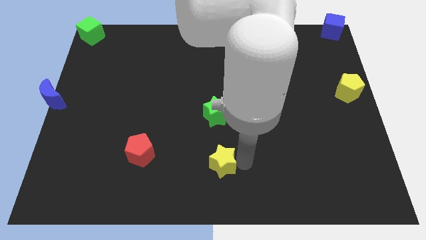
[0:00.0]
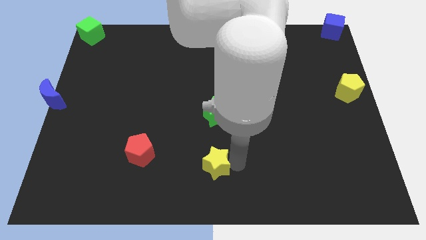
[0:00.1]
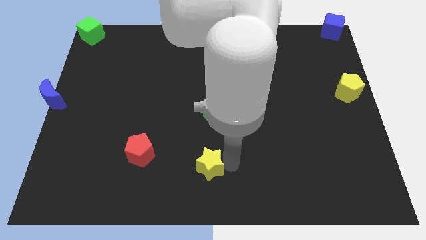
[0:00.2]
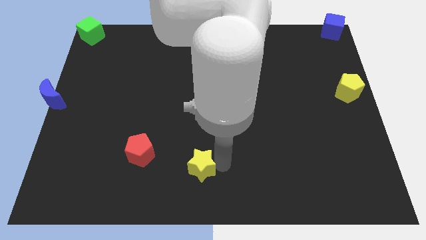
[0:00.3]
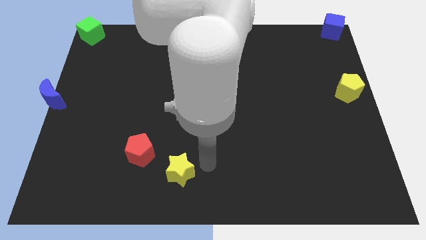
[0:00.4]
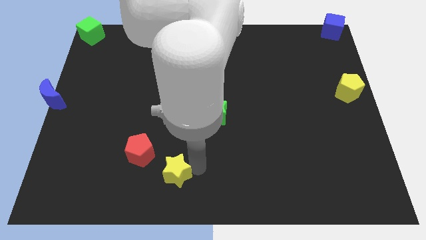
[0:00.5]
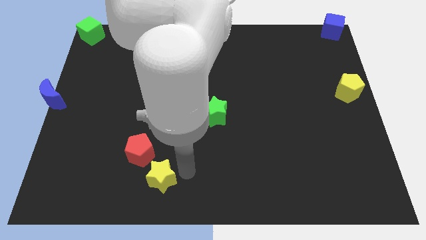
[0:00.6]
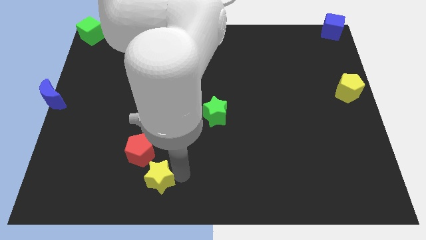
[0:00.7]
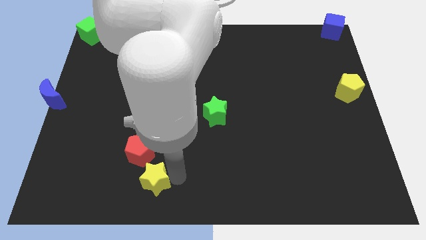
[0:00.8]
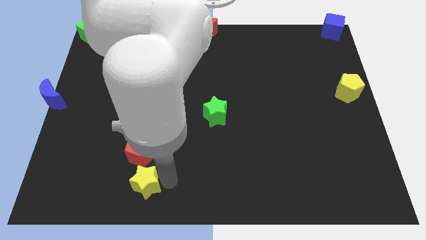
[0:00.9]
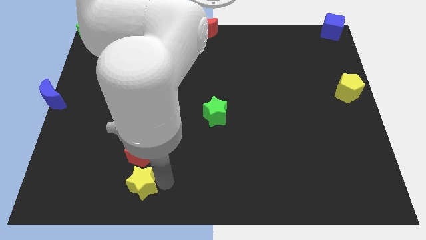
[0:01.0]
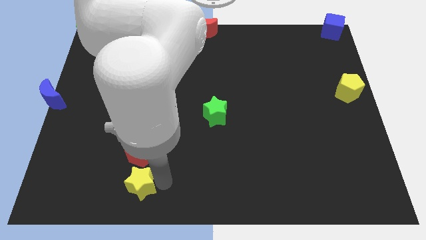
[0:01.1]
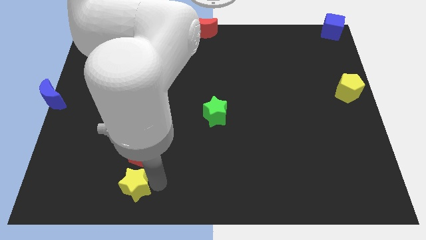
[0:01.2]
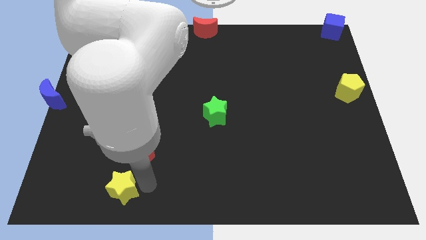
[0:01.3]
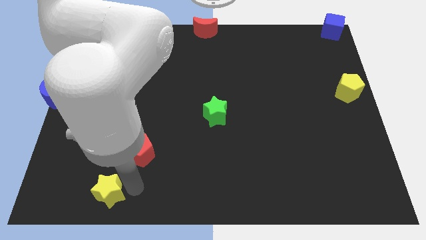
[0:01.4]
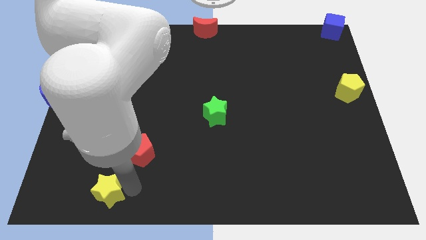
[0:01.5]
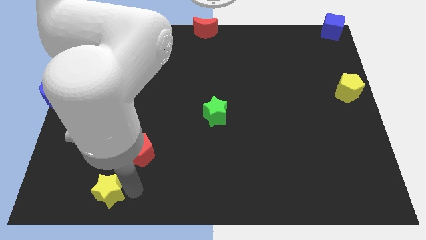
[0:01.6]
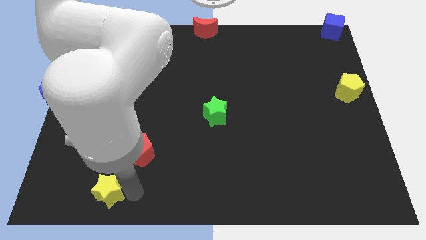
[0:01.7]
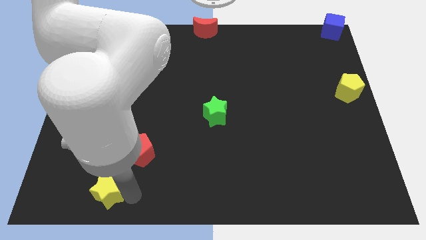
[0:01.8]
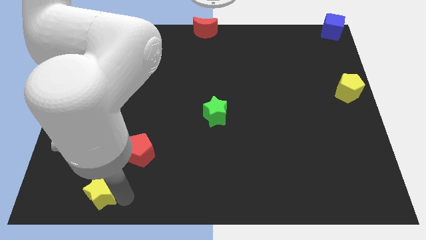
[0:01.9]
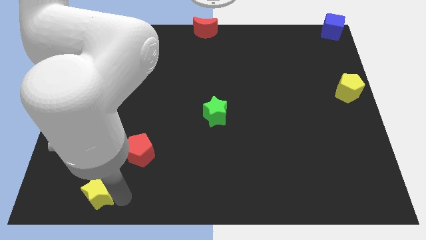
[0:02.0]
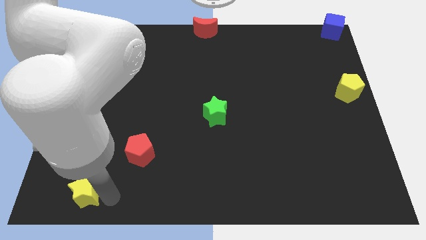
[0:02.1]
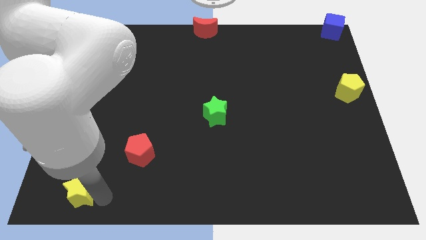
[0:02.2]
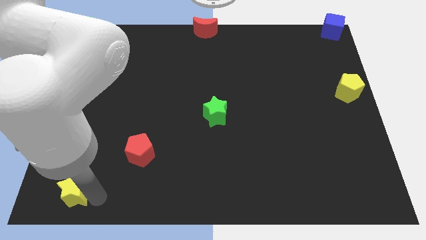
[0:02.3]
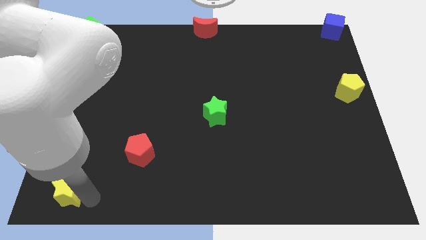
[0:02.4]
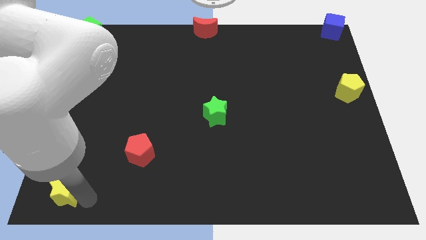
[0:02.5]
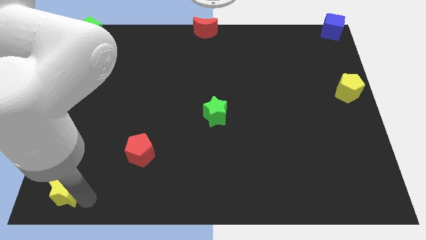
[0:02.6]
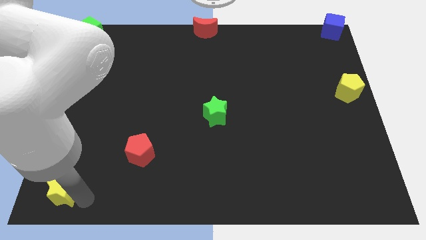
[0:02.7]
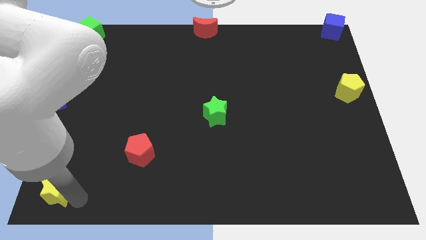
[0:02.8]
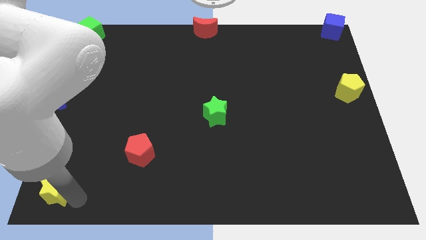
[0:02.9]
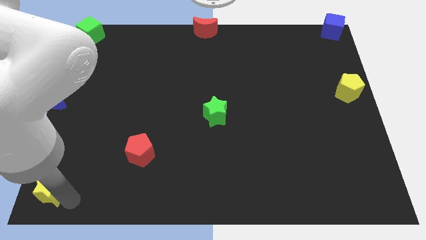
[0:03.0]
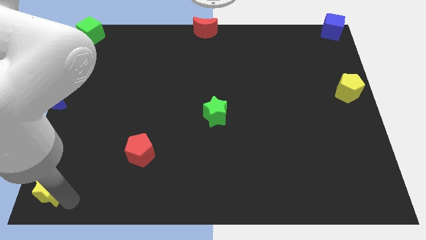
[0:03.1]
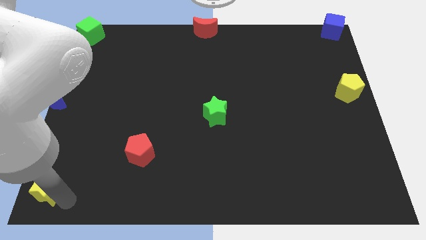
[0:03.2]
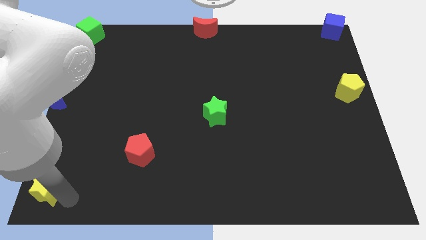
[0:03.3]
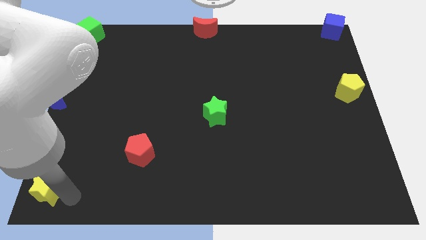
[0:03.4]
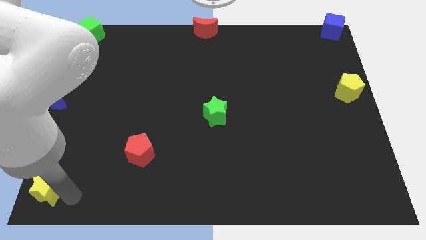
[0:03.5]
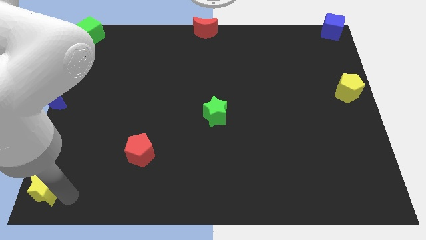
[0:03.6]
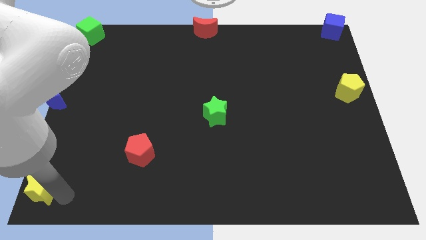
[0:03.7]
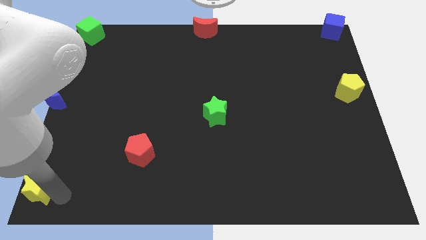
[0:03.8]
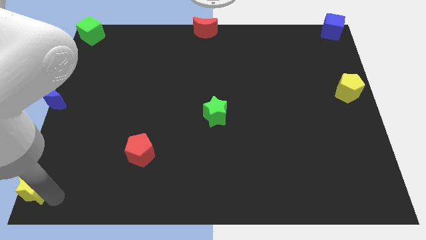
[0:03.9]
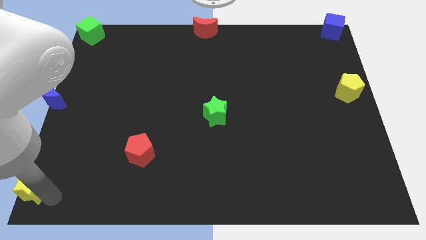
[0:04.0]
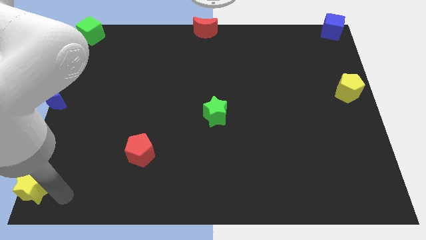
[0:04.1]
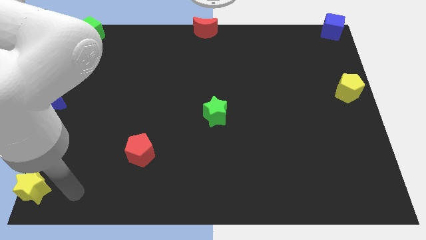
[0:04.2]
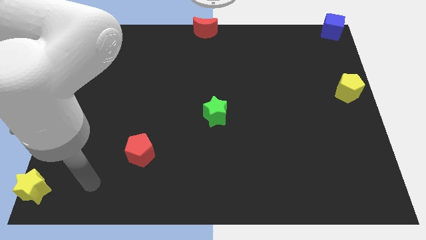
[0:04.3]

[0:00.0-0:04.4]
move the yellow star to the bottom left corner

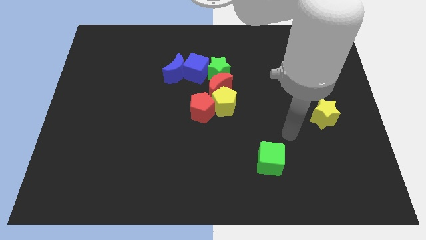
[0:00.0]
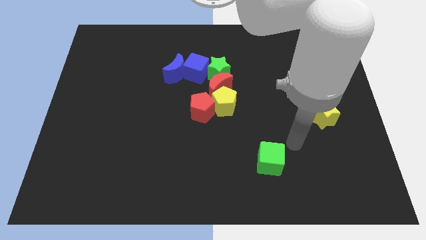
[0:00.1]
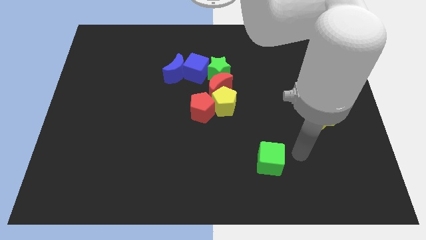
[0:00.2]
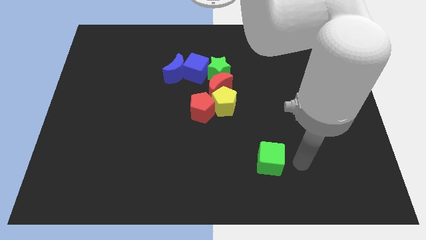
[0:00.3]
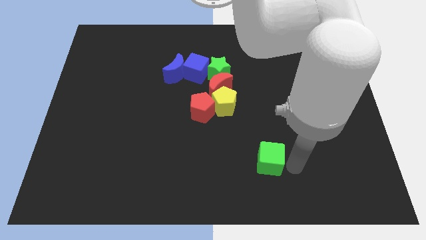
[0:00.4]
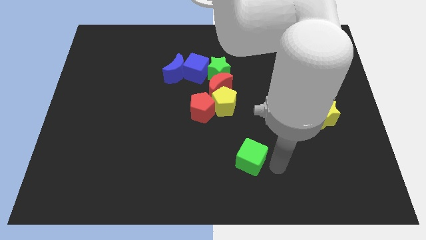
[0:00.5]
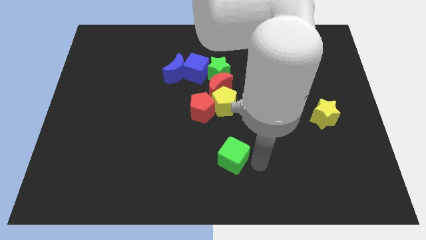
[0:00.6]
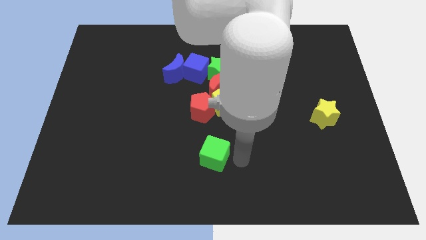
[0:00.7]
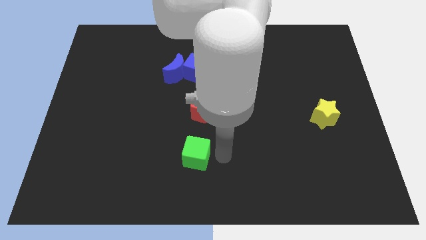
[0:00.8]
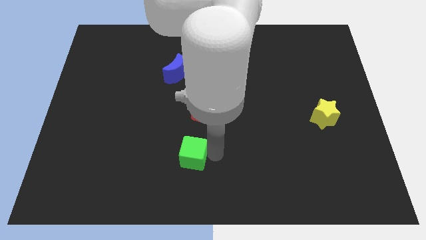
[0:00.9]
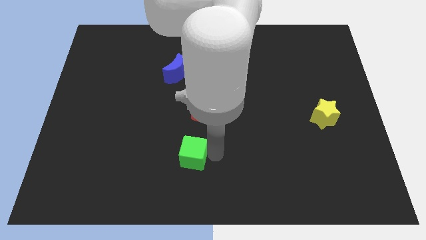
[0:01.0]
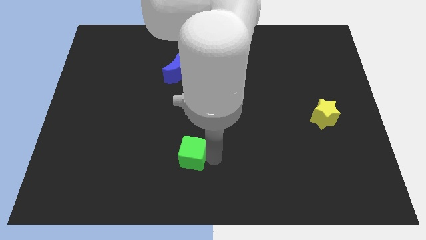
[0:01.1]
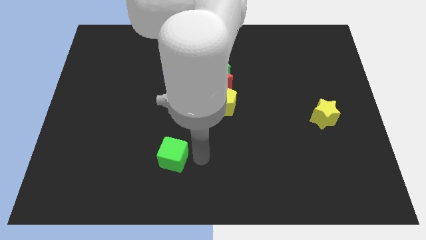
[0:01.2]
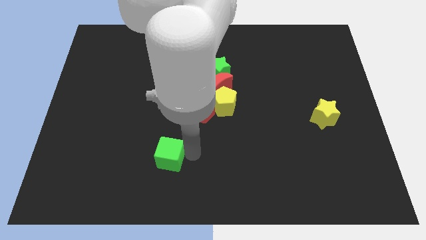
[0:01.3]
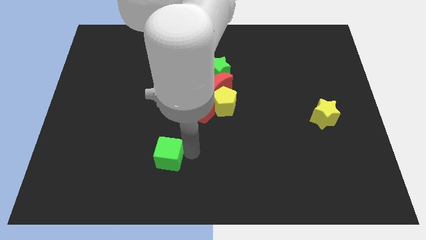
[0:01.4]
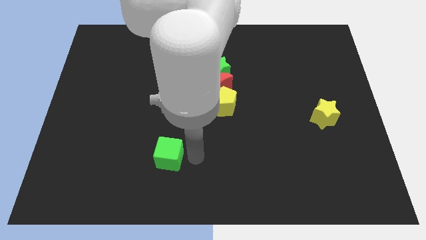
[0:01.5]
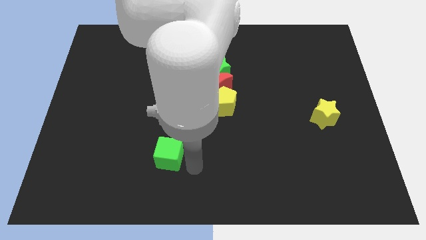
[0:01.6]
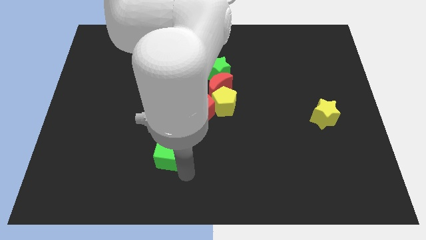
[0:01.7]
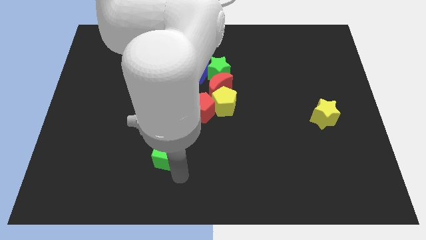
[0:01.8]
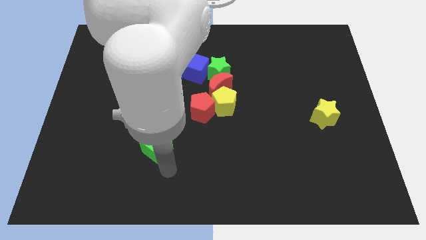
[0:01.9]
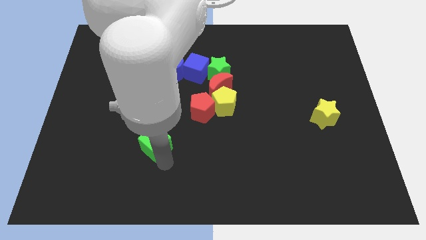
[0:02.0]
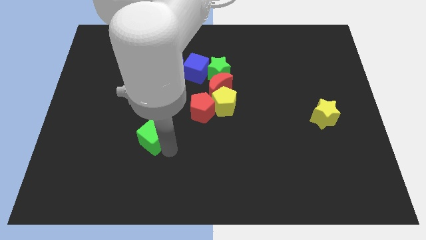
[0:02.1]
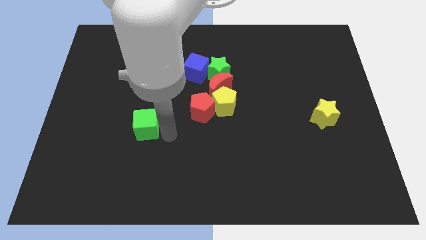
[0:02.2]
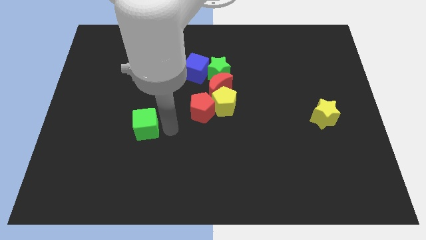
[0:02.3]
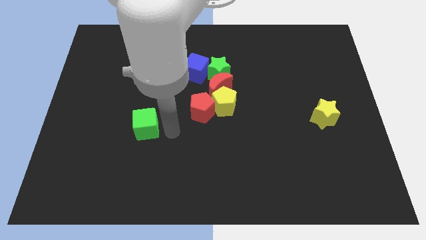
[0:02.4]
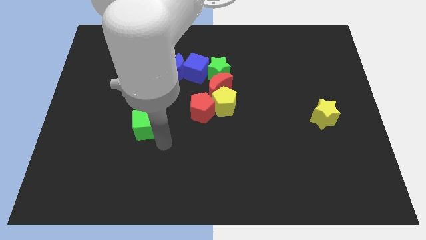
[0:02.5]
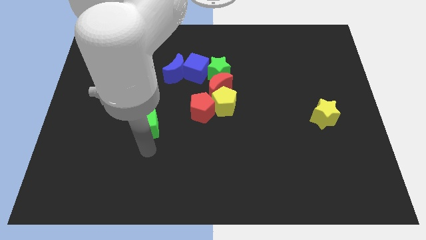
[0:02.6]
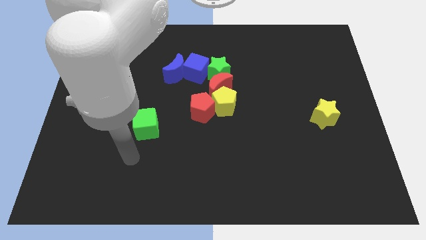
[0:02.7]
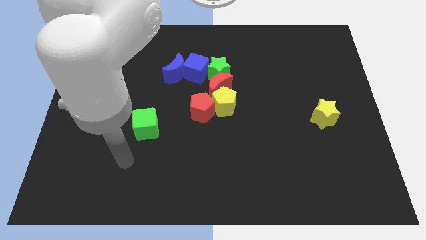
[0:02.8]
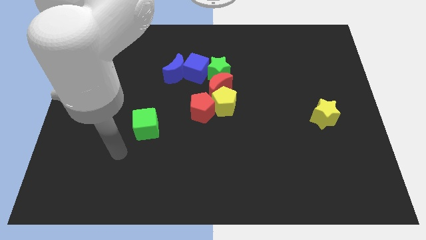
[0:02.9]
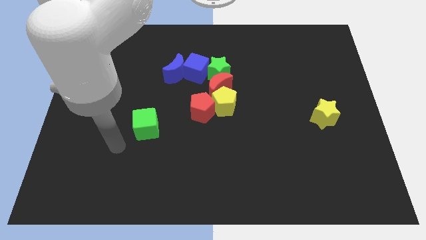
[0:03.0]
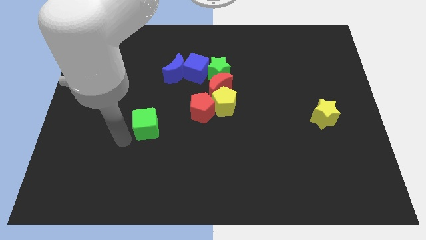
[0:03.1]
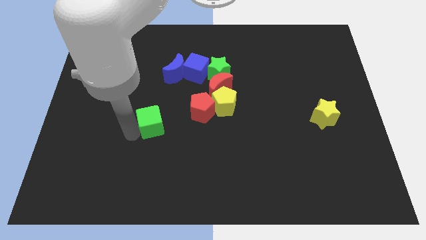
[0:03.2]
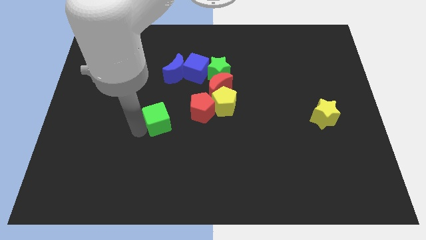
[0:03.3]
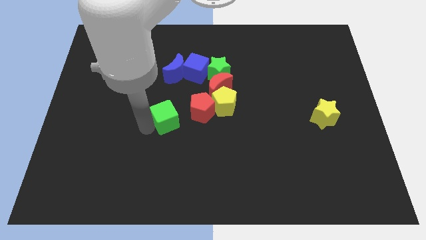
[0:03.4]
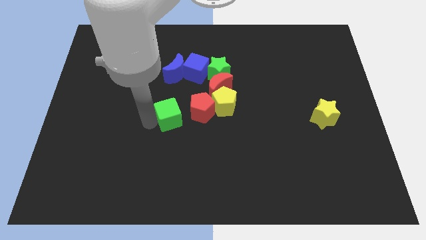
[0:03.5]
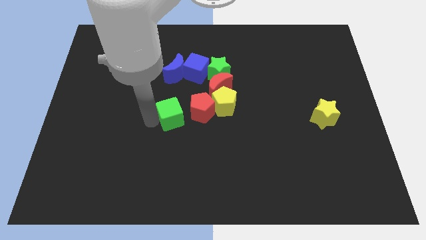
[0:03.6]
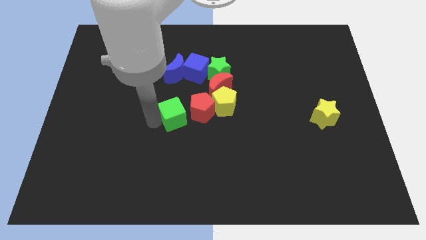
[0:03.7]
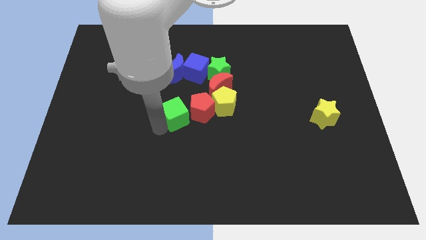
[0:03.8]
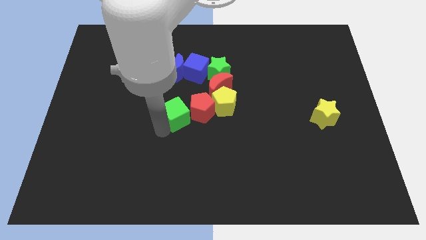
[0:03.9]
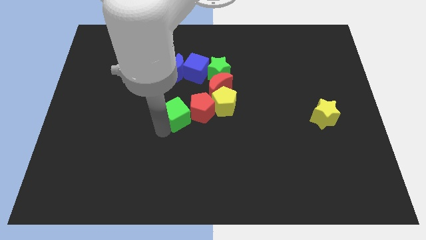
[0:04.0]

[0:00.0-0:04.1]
put the green cube into the red pentagon

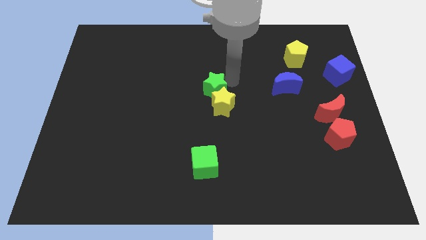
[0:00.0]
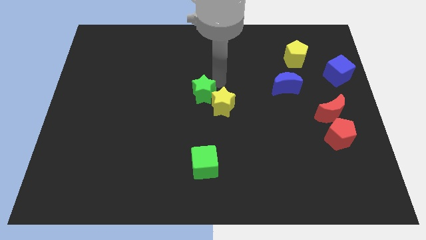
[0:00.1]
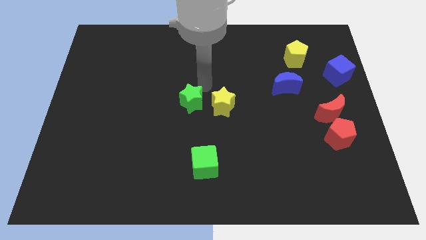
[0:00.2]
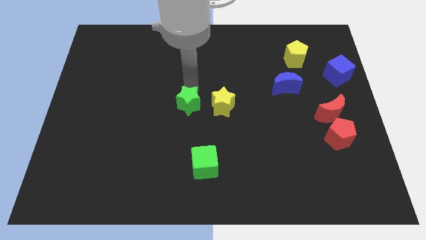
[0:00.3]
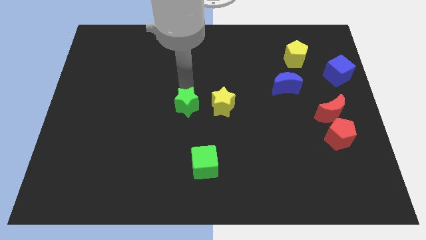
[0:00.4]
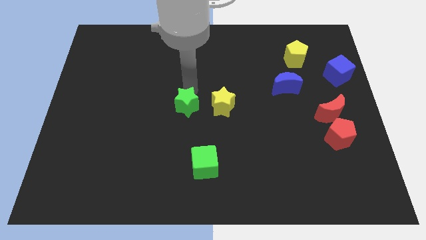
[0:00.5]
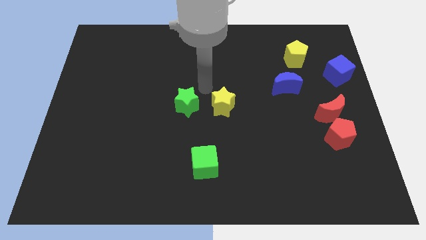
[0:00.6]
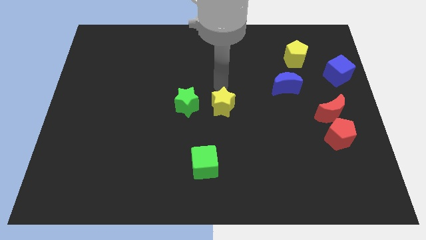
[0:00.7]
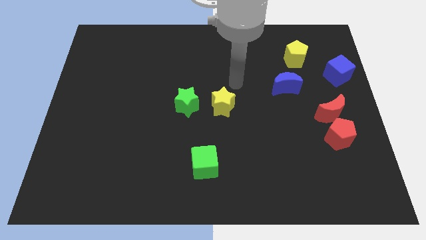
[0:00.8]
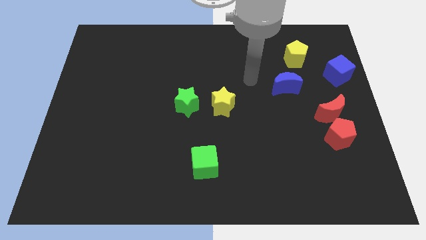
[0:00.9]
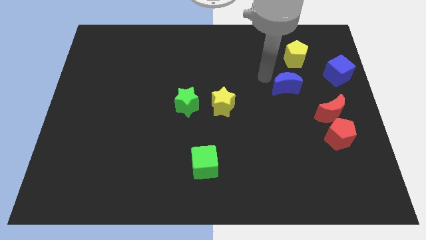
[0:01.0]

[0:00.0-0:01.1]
move the green star to the left
